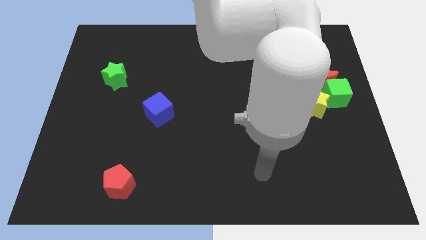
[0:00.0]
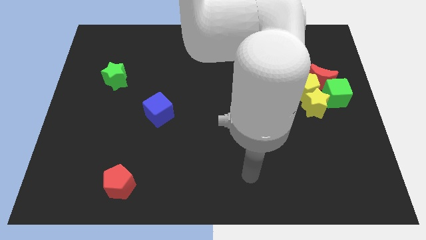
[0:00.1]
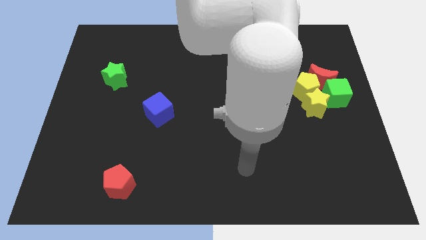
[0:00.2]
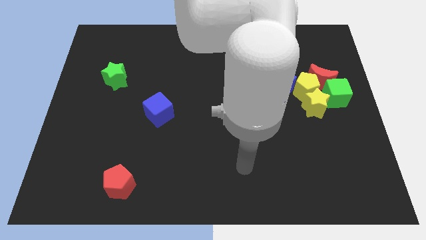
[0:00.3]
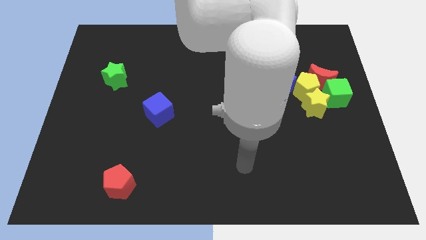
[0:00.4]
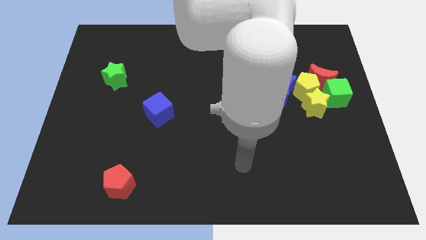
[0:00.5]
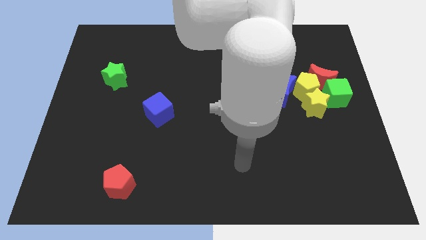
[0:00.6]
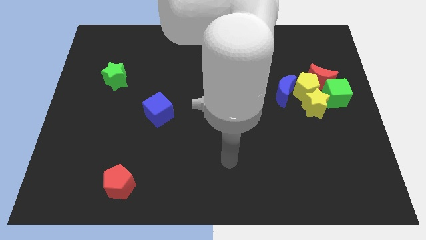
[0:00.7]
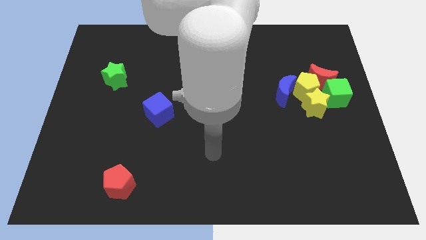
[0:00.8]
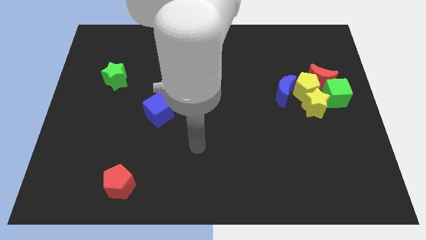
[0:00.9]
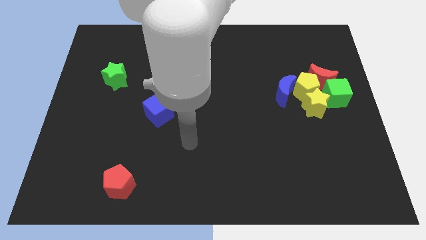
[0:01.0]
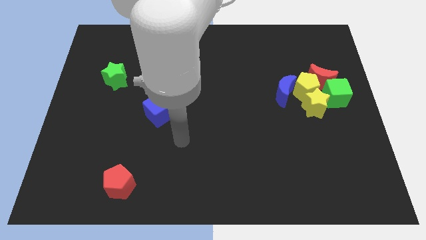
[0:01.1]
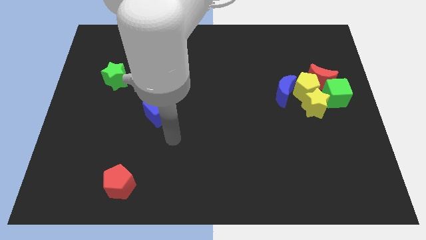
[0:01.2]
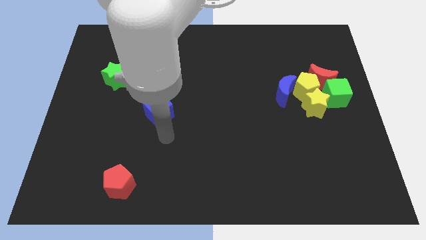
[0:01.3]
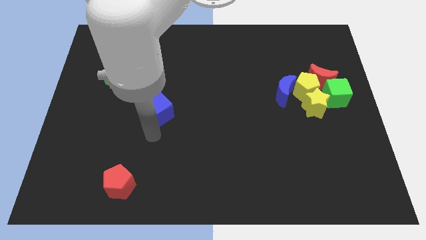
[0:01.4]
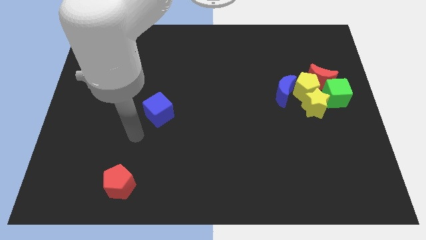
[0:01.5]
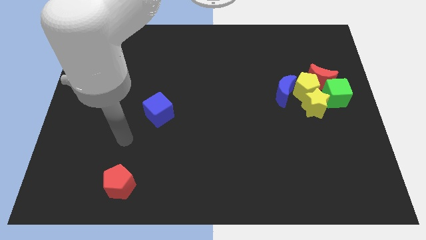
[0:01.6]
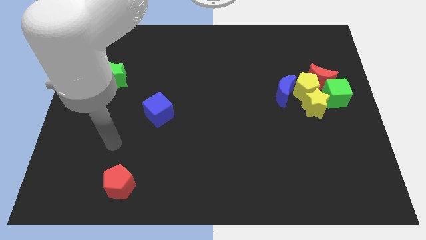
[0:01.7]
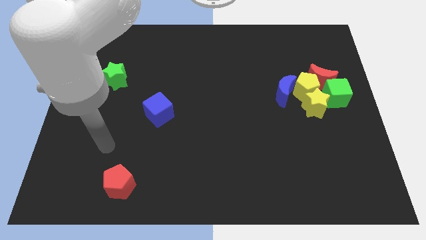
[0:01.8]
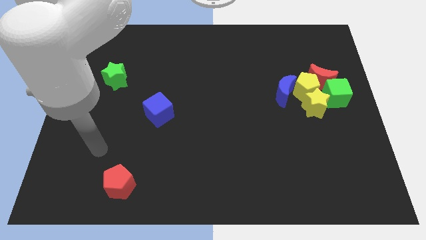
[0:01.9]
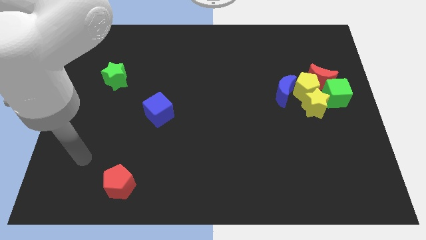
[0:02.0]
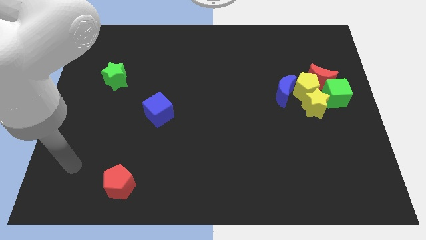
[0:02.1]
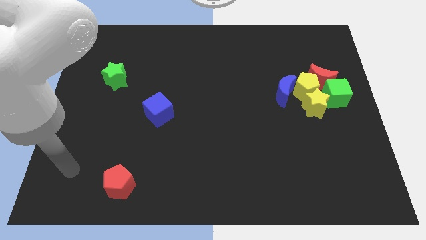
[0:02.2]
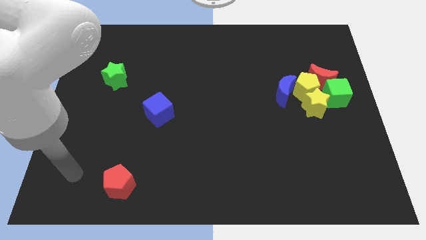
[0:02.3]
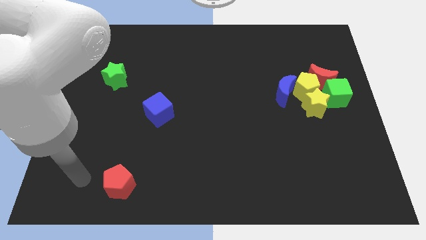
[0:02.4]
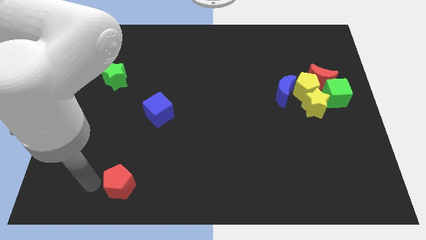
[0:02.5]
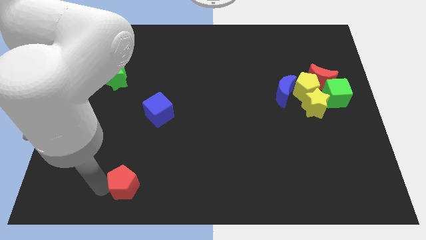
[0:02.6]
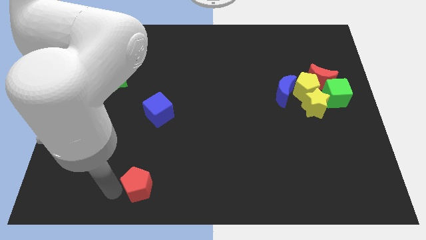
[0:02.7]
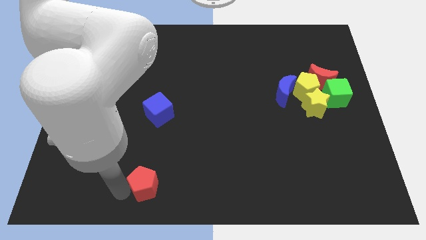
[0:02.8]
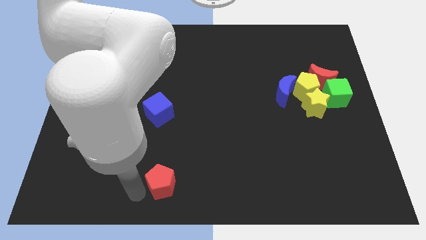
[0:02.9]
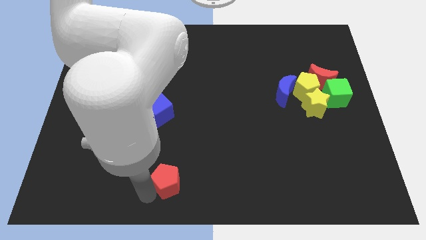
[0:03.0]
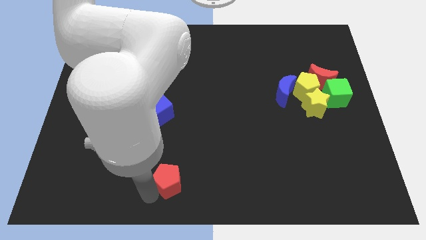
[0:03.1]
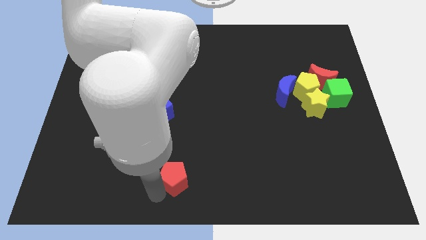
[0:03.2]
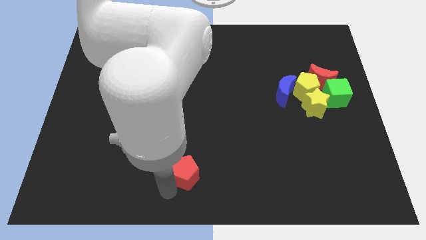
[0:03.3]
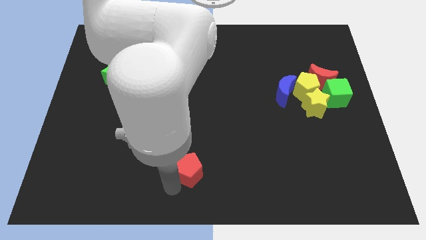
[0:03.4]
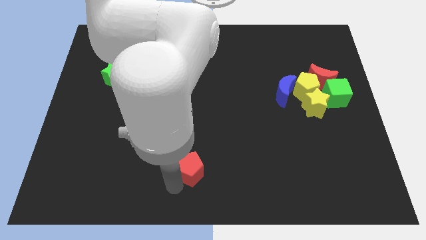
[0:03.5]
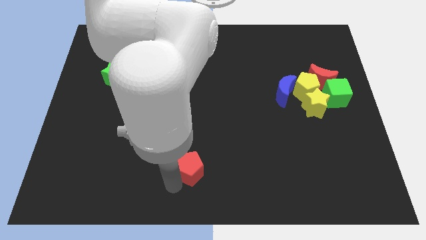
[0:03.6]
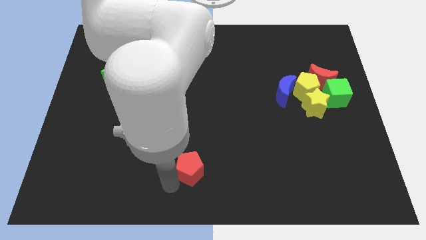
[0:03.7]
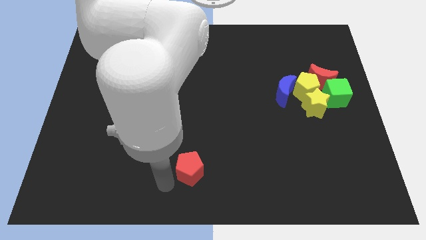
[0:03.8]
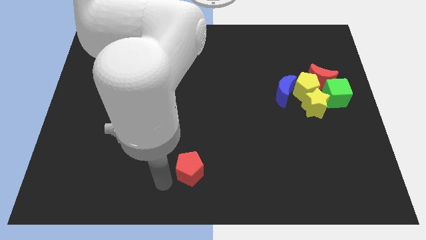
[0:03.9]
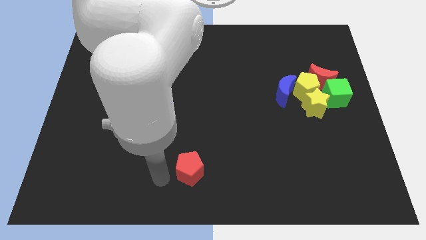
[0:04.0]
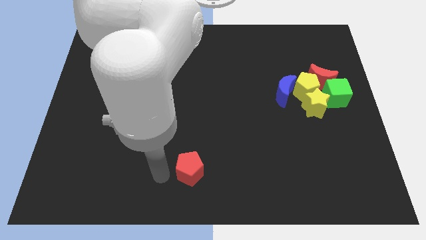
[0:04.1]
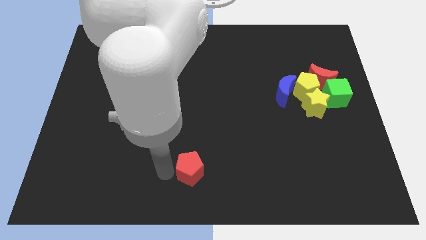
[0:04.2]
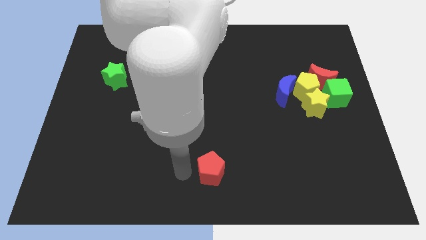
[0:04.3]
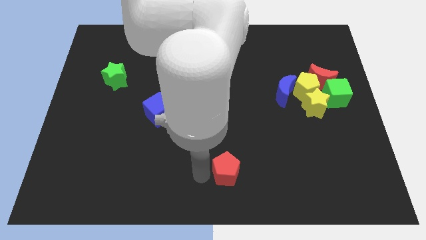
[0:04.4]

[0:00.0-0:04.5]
move the red pentagon to the bottom center side

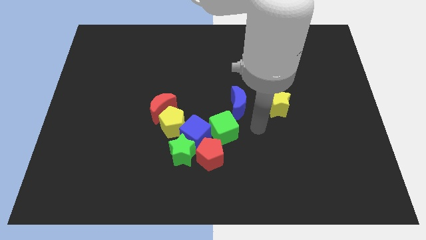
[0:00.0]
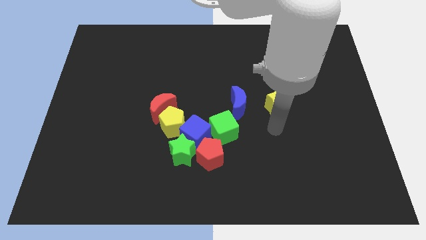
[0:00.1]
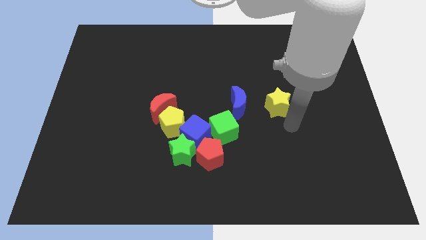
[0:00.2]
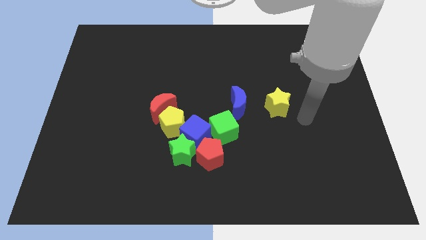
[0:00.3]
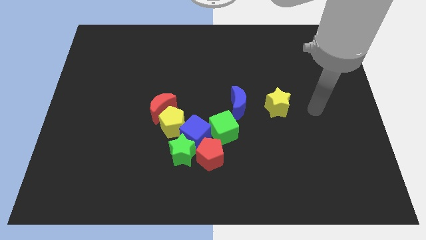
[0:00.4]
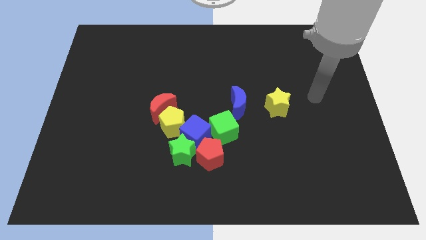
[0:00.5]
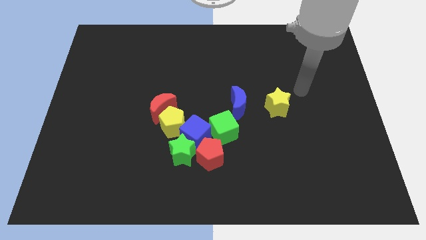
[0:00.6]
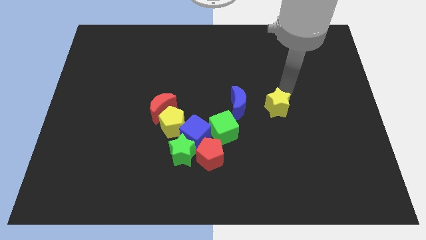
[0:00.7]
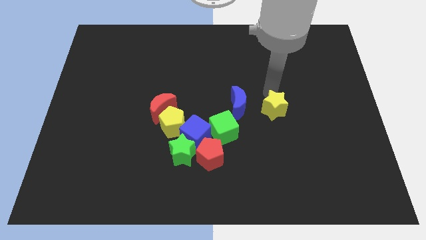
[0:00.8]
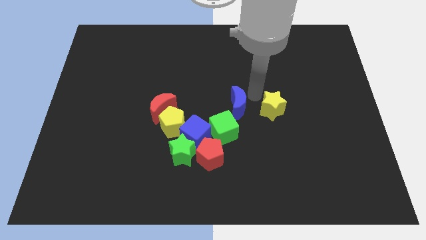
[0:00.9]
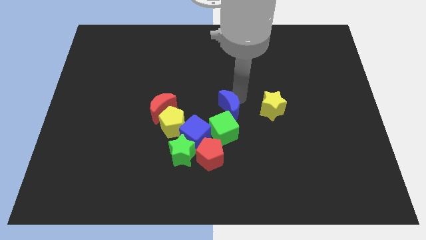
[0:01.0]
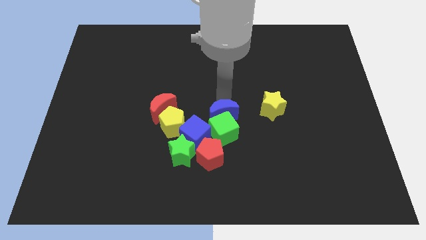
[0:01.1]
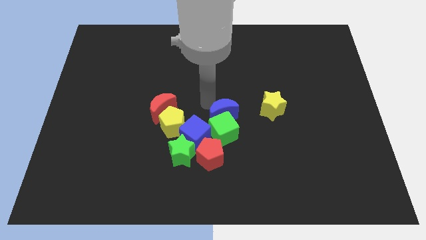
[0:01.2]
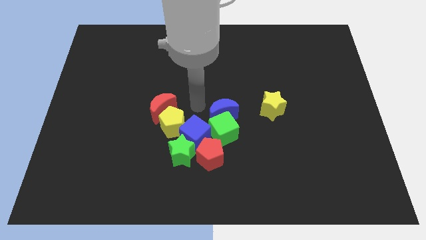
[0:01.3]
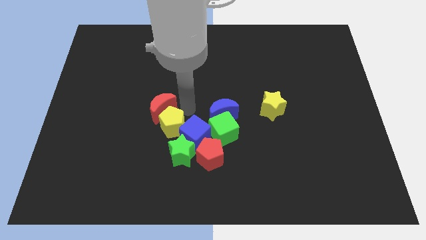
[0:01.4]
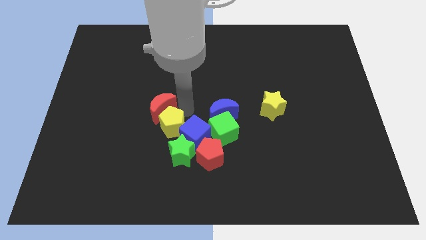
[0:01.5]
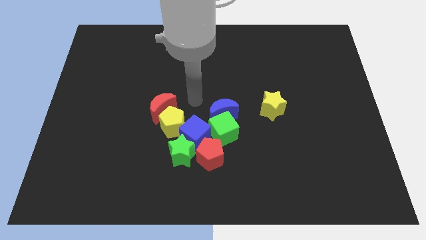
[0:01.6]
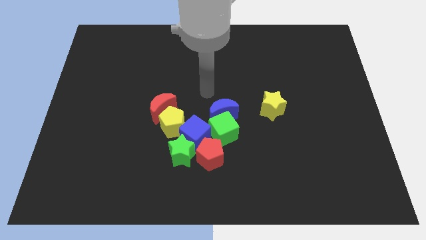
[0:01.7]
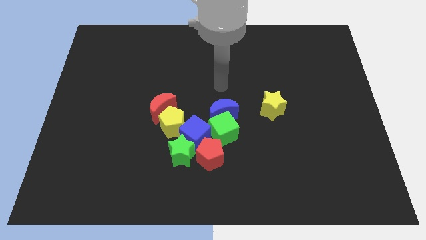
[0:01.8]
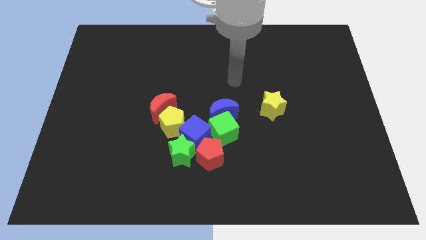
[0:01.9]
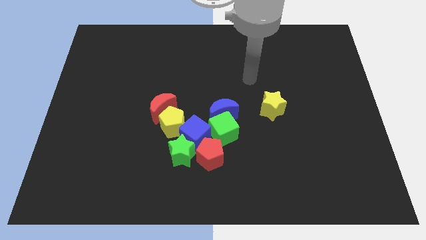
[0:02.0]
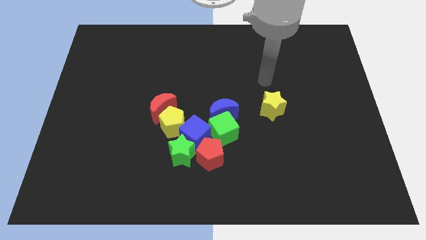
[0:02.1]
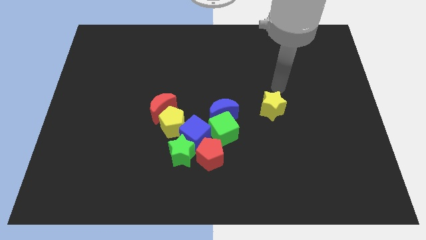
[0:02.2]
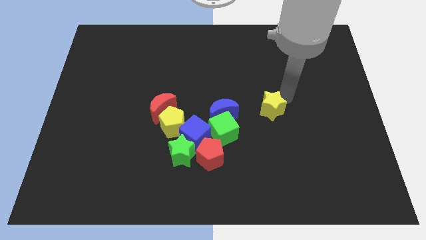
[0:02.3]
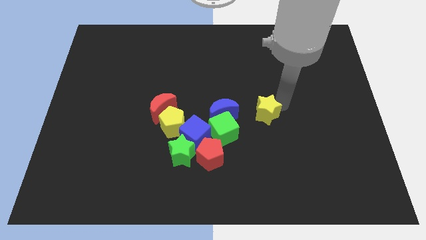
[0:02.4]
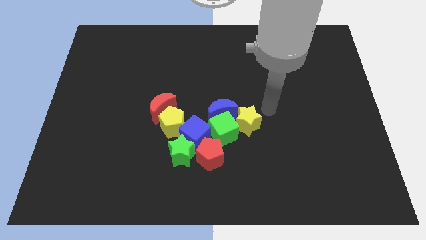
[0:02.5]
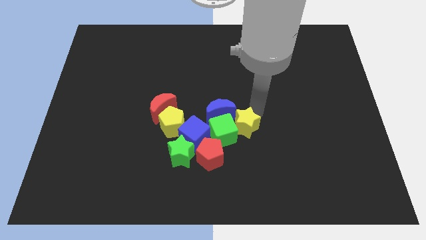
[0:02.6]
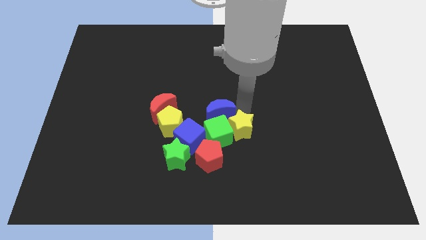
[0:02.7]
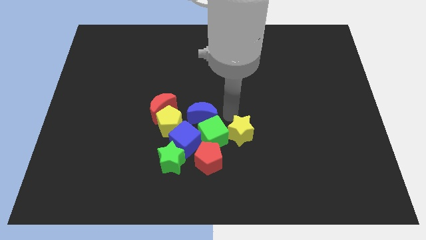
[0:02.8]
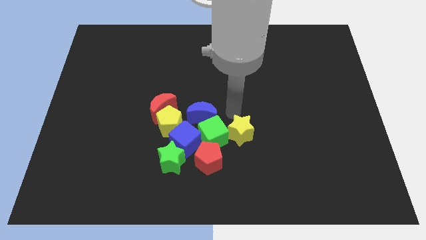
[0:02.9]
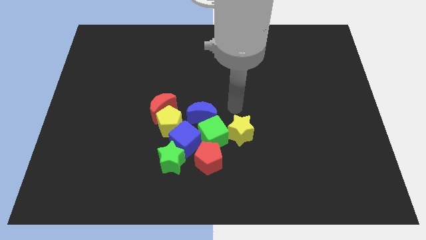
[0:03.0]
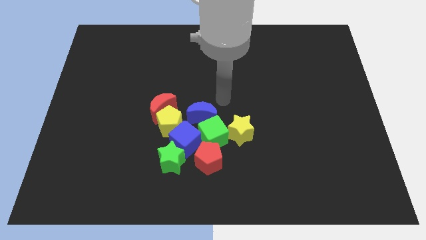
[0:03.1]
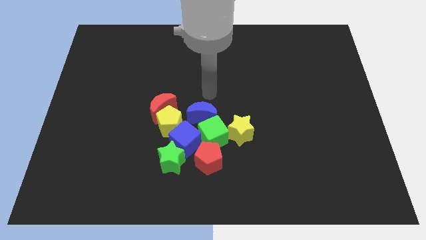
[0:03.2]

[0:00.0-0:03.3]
move the blue crrescent and yellow star into the group of blocks

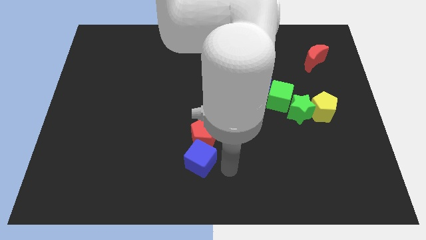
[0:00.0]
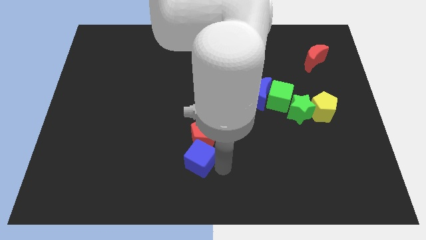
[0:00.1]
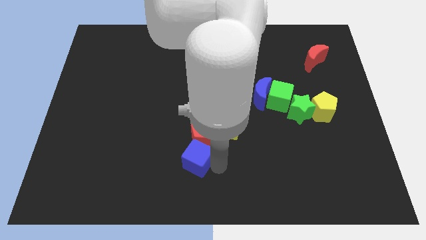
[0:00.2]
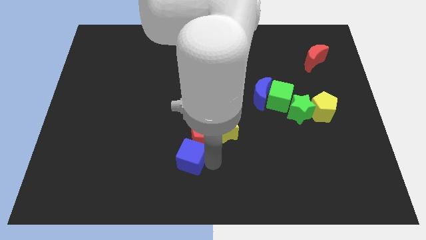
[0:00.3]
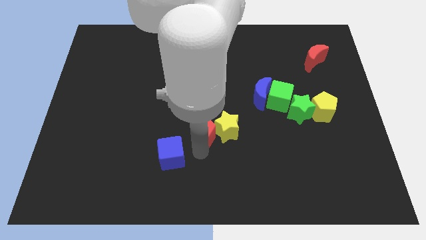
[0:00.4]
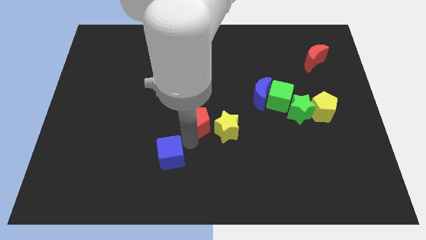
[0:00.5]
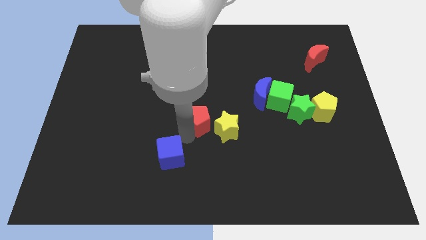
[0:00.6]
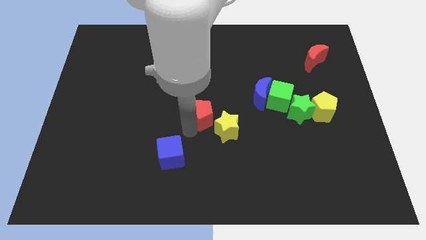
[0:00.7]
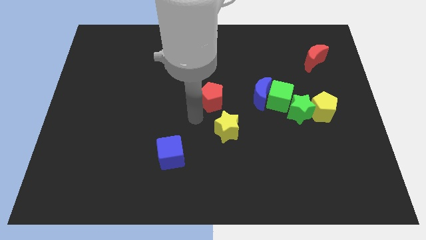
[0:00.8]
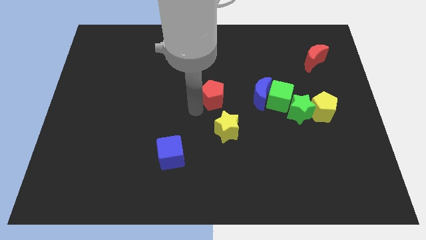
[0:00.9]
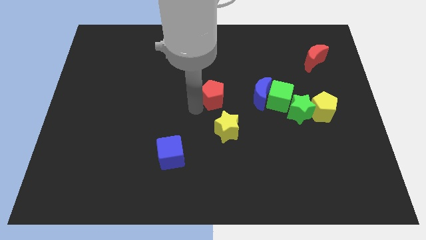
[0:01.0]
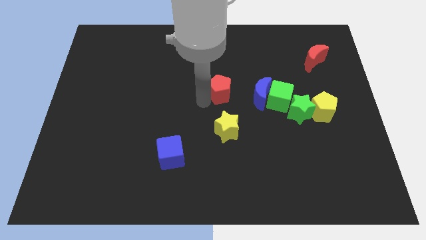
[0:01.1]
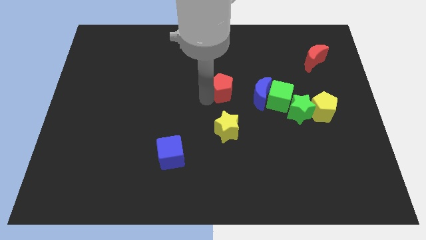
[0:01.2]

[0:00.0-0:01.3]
separate the blue cube and the red pentagon
